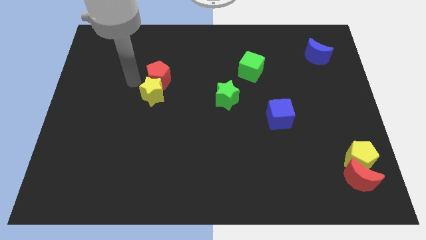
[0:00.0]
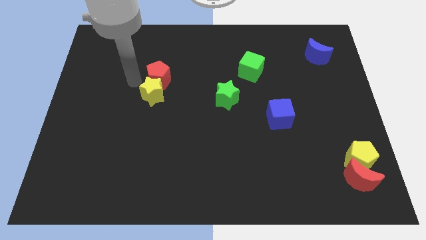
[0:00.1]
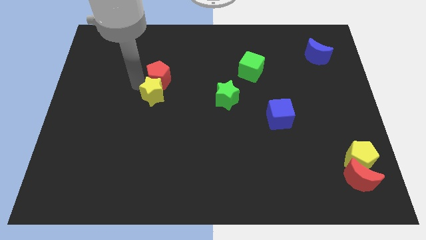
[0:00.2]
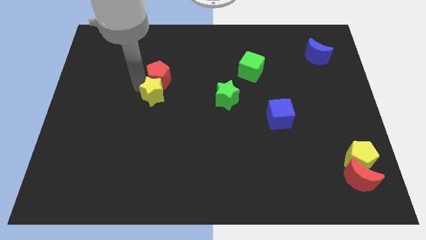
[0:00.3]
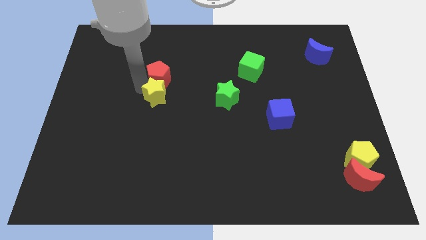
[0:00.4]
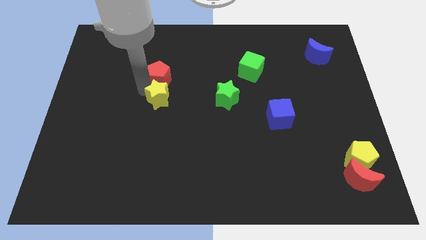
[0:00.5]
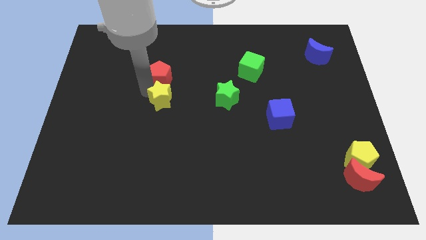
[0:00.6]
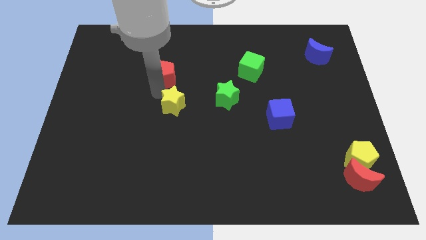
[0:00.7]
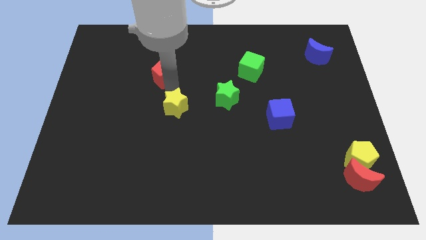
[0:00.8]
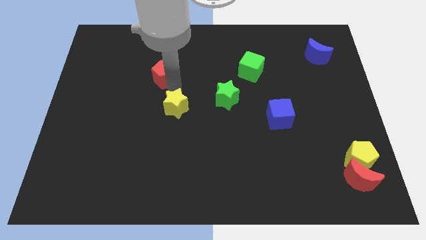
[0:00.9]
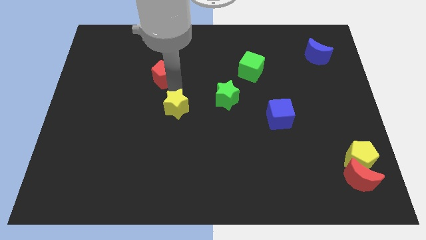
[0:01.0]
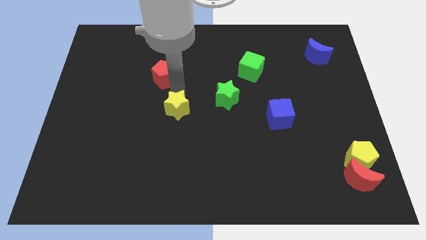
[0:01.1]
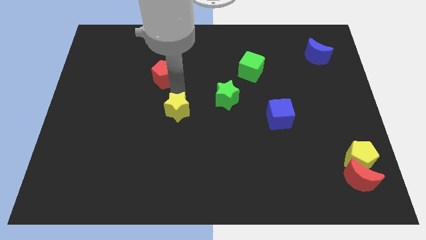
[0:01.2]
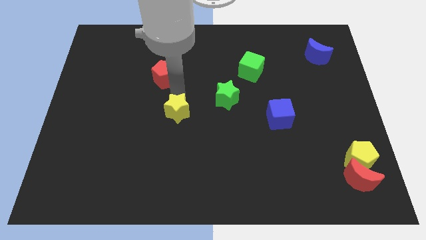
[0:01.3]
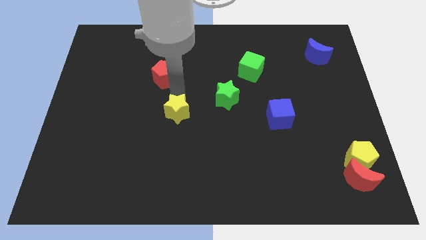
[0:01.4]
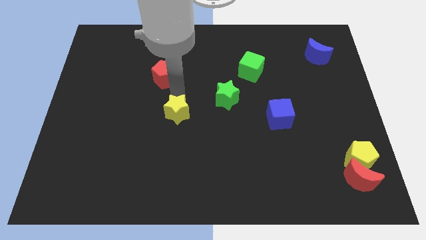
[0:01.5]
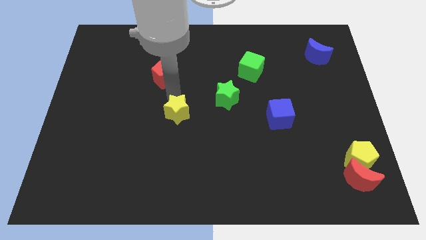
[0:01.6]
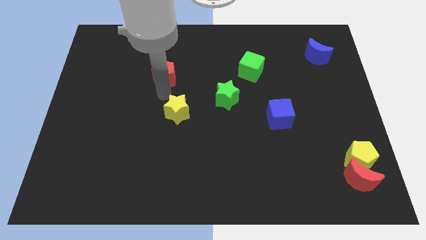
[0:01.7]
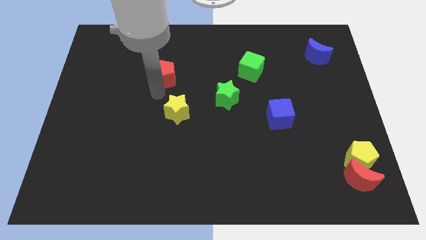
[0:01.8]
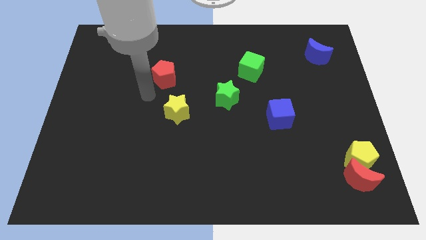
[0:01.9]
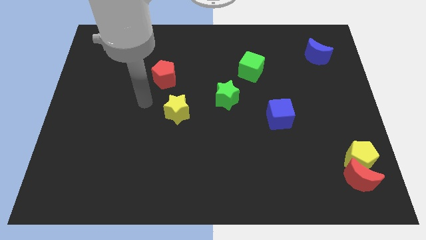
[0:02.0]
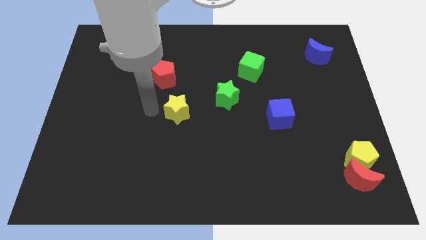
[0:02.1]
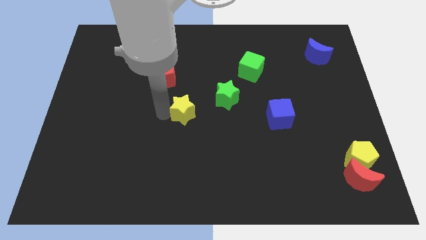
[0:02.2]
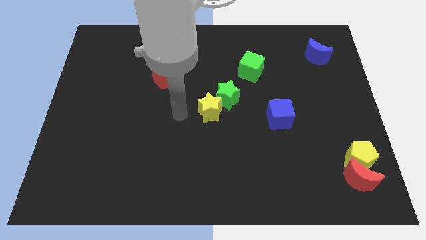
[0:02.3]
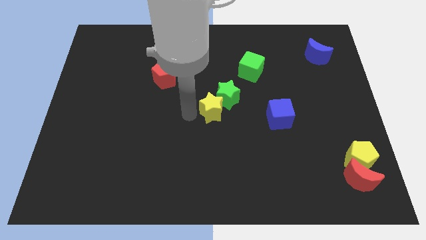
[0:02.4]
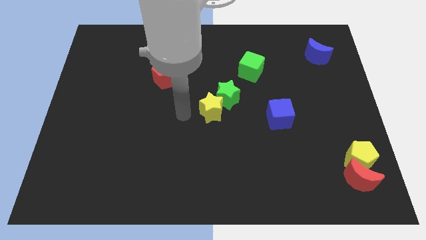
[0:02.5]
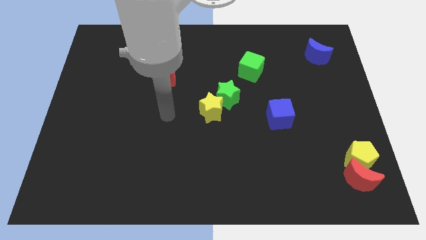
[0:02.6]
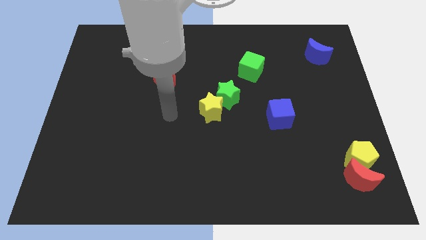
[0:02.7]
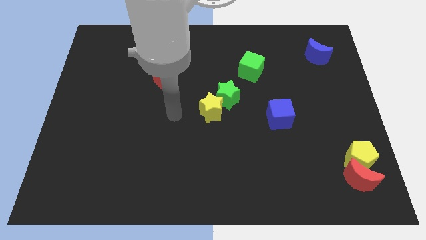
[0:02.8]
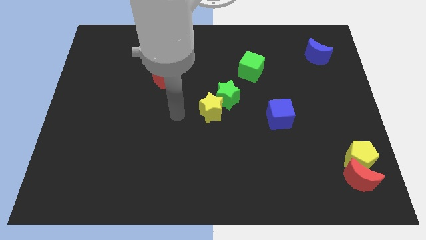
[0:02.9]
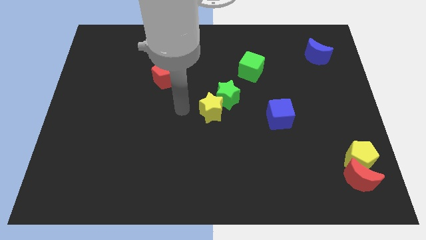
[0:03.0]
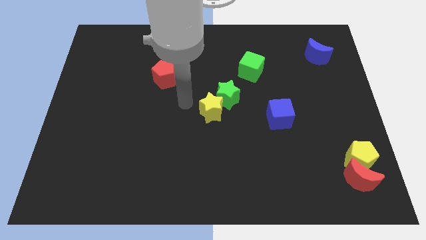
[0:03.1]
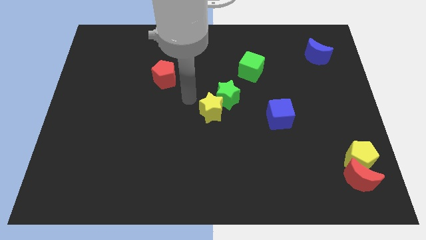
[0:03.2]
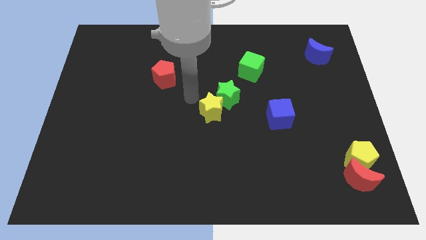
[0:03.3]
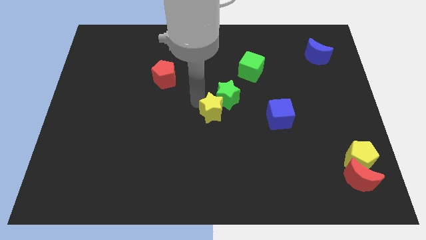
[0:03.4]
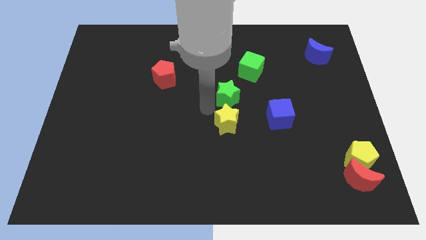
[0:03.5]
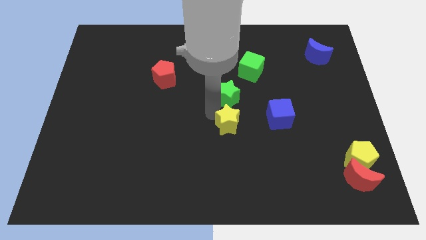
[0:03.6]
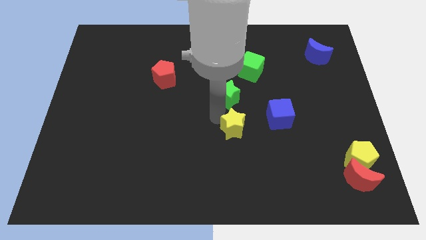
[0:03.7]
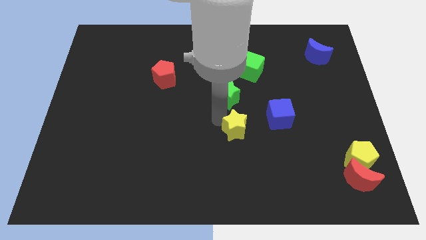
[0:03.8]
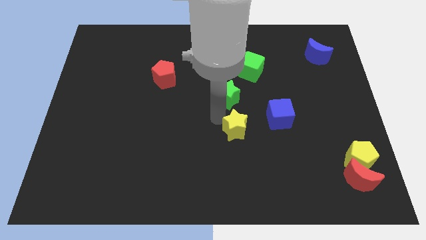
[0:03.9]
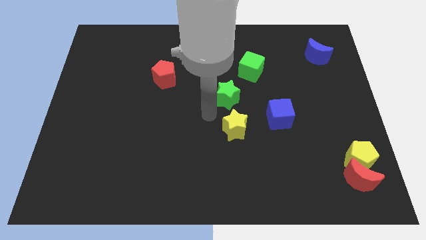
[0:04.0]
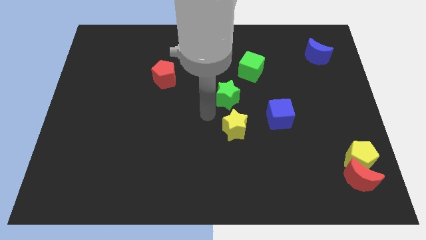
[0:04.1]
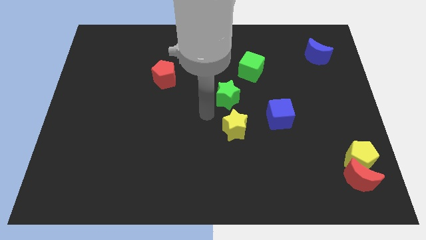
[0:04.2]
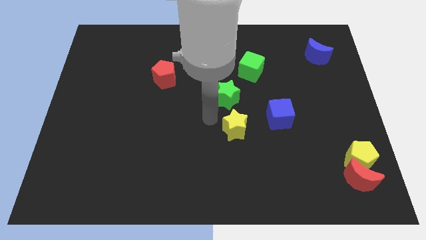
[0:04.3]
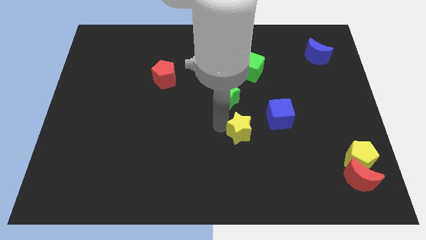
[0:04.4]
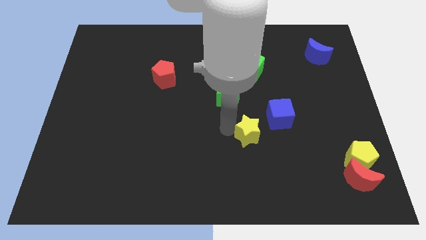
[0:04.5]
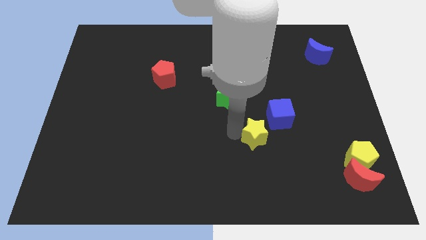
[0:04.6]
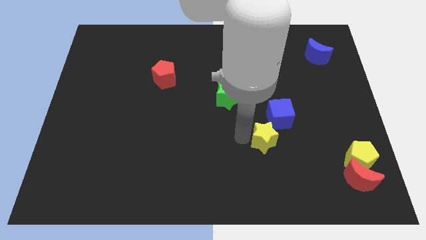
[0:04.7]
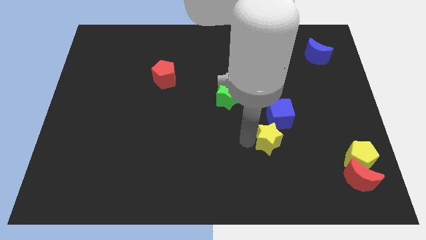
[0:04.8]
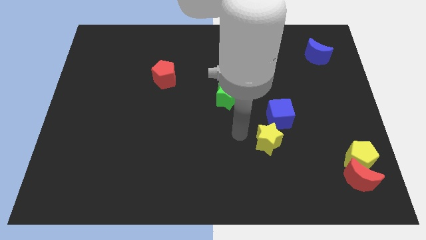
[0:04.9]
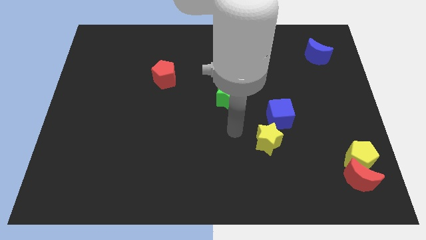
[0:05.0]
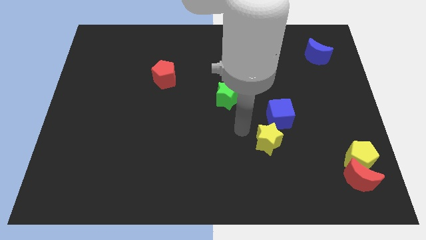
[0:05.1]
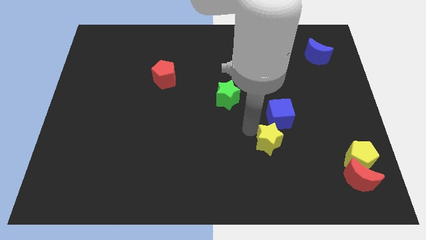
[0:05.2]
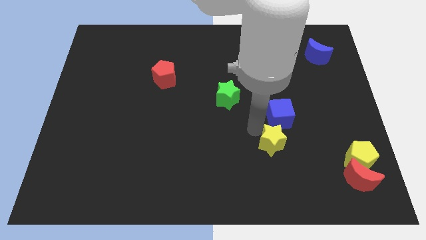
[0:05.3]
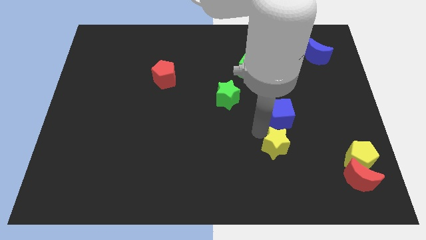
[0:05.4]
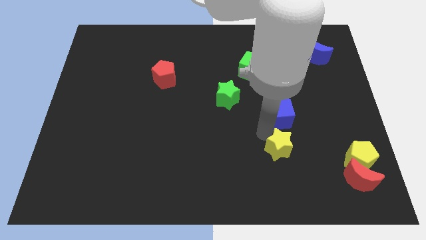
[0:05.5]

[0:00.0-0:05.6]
move yellow star towards bottom of blue cube

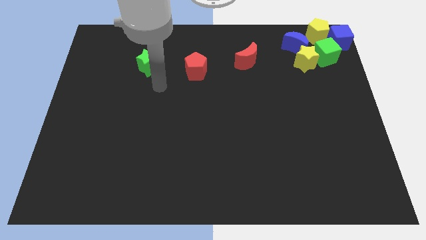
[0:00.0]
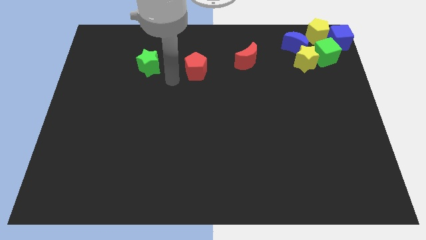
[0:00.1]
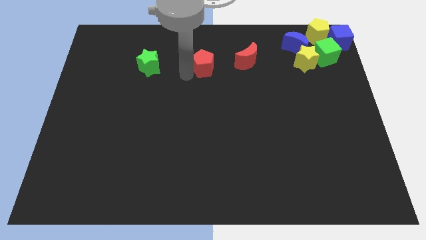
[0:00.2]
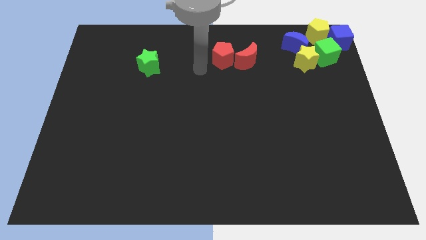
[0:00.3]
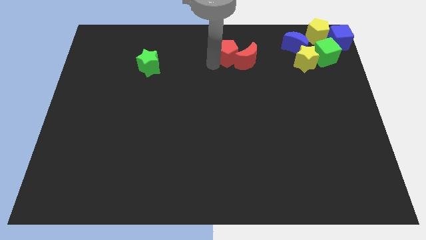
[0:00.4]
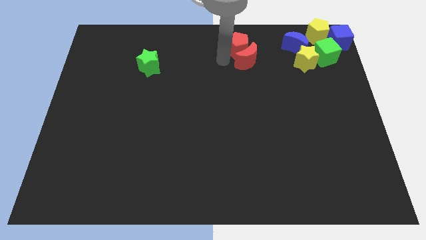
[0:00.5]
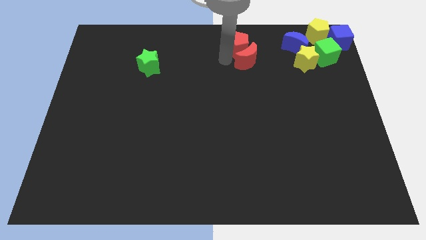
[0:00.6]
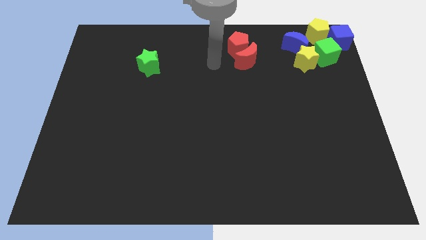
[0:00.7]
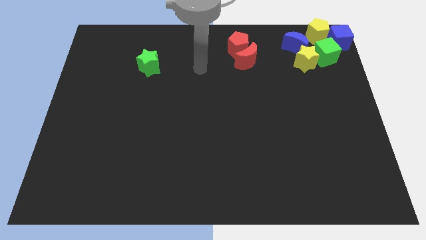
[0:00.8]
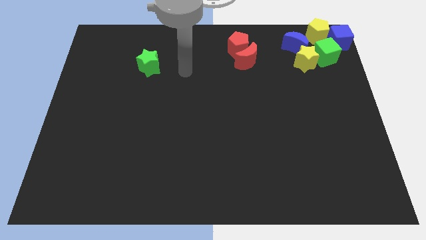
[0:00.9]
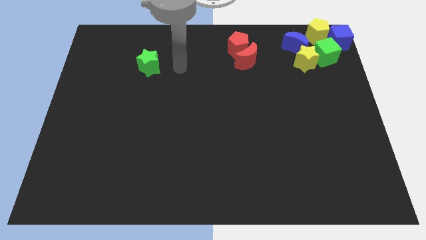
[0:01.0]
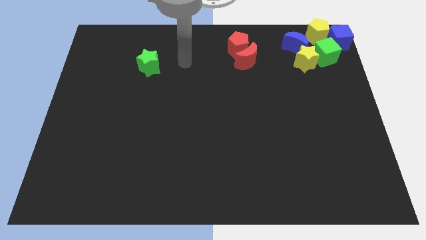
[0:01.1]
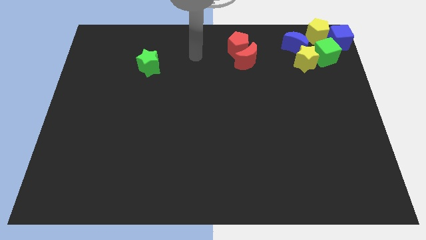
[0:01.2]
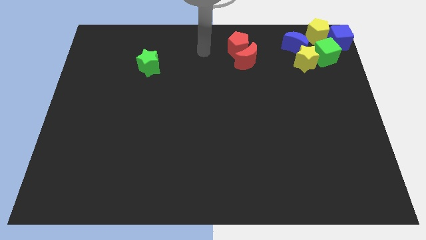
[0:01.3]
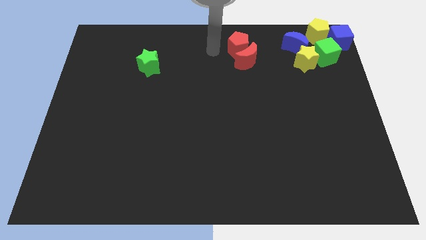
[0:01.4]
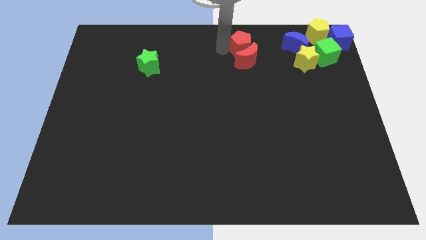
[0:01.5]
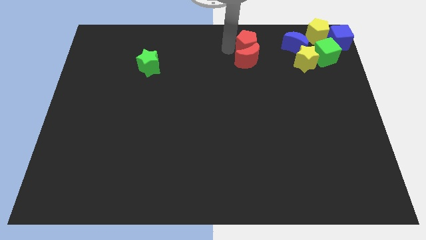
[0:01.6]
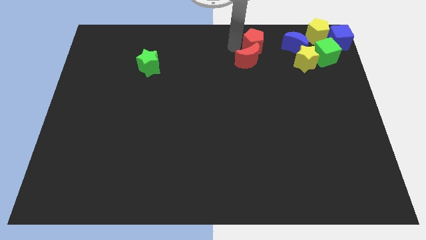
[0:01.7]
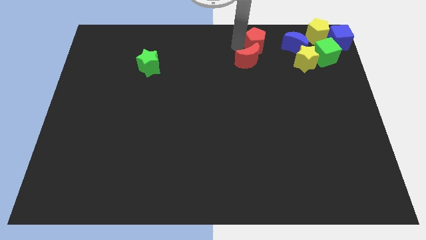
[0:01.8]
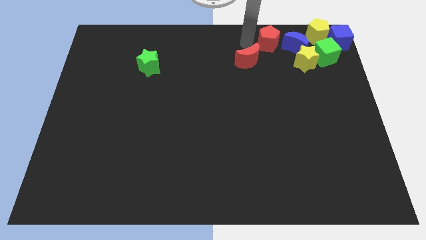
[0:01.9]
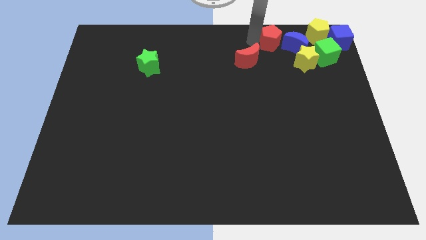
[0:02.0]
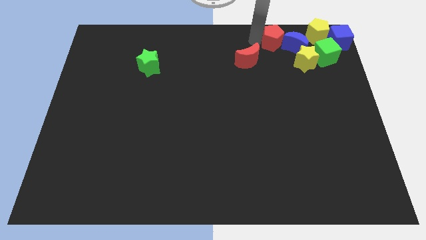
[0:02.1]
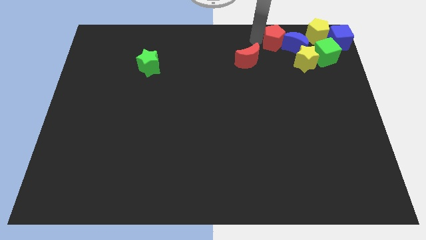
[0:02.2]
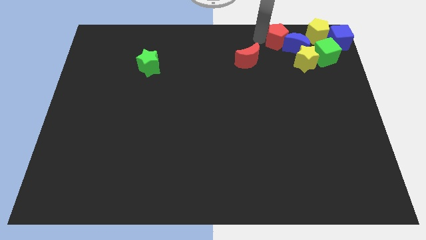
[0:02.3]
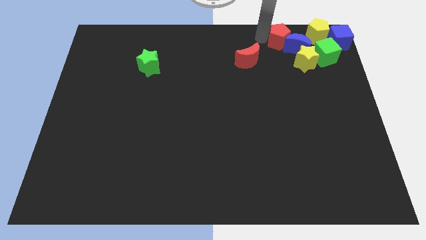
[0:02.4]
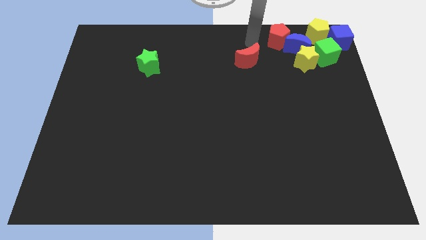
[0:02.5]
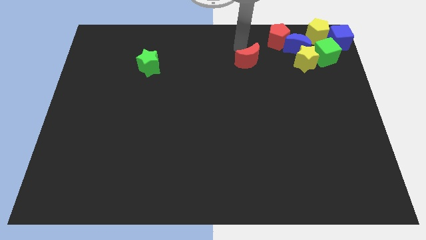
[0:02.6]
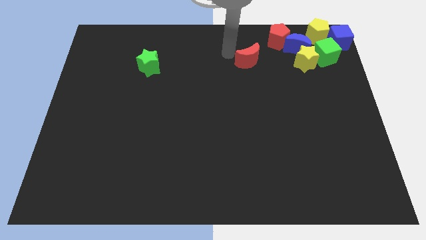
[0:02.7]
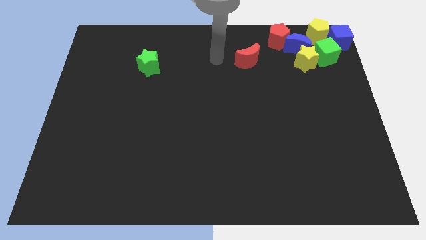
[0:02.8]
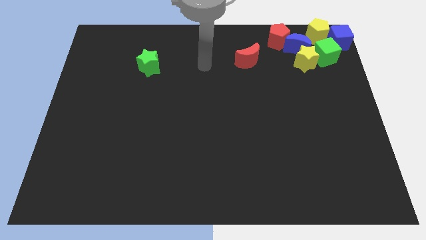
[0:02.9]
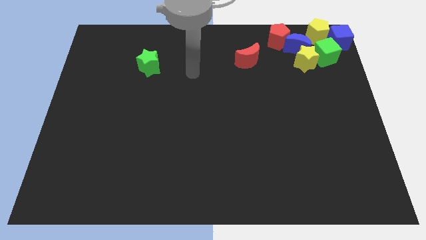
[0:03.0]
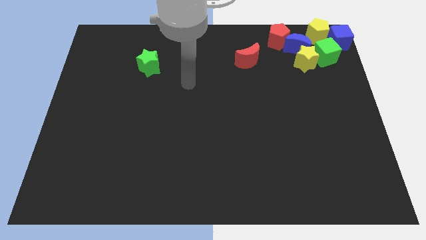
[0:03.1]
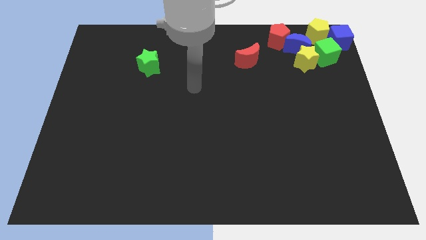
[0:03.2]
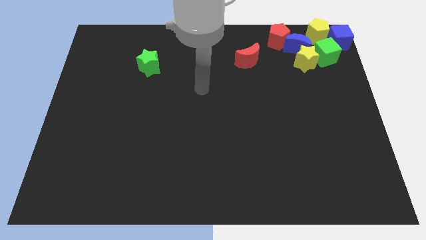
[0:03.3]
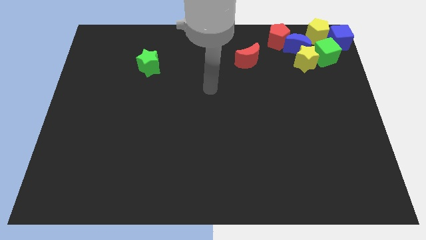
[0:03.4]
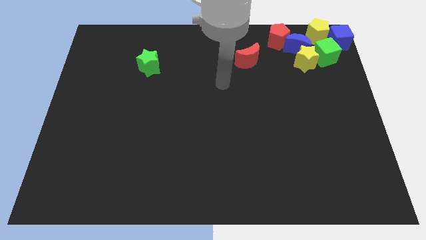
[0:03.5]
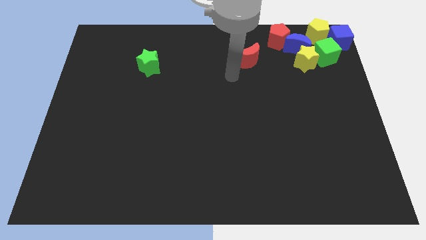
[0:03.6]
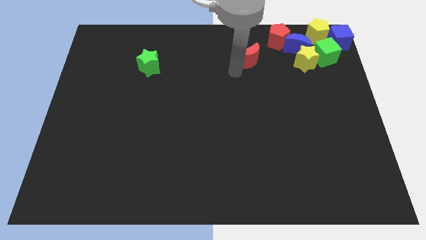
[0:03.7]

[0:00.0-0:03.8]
move the red pentagon to the top left to the blue crescent
